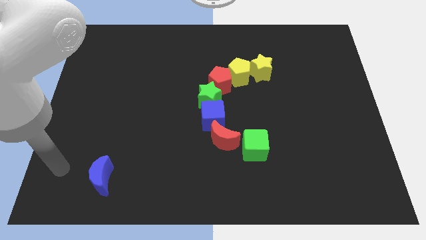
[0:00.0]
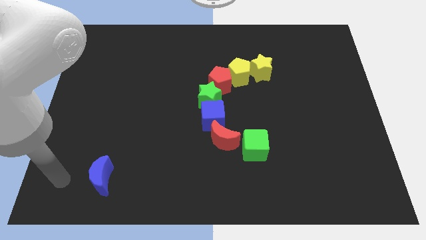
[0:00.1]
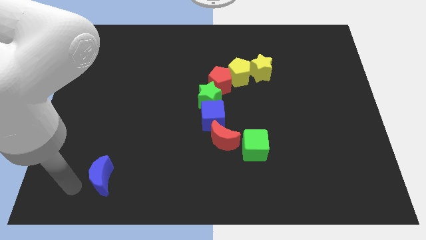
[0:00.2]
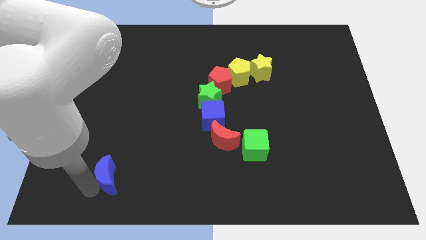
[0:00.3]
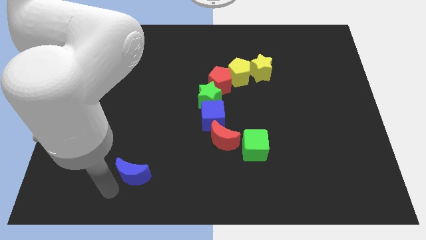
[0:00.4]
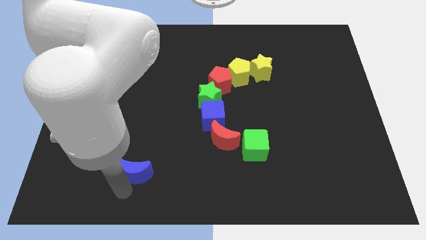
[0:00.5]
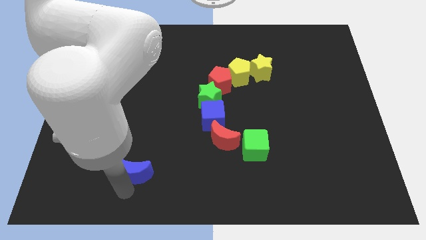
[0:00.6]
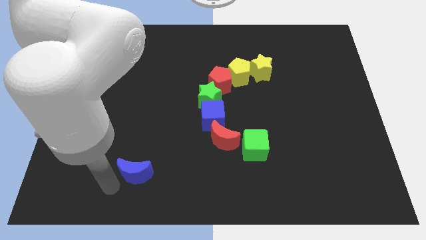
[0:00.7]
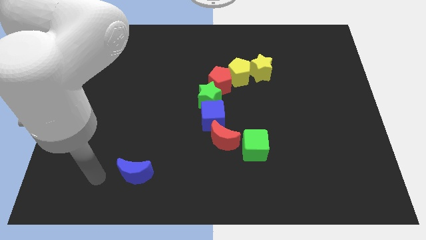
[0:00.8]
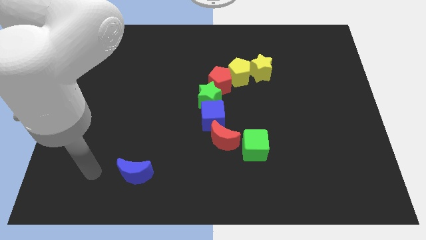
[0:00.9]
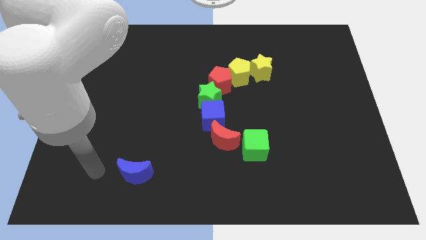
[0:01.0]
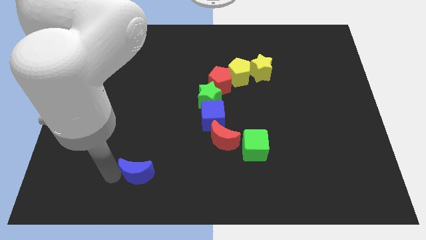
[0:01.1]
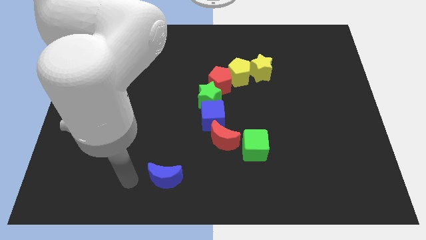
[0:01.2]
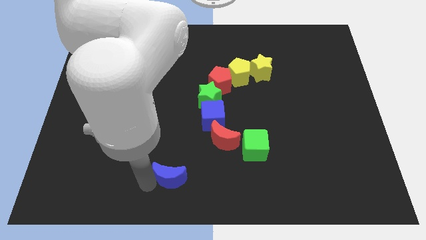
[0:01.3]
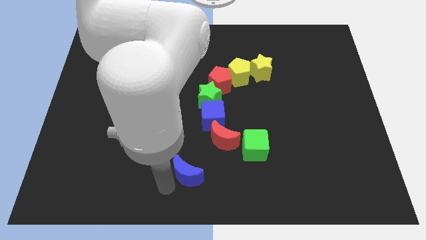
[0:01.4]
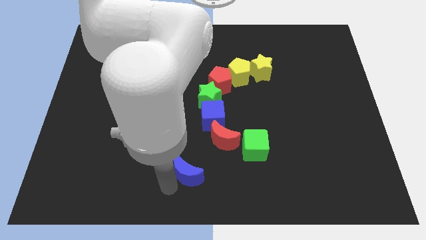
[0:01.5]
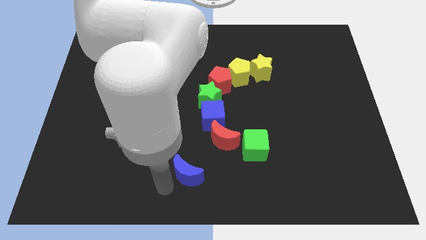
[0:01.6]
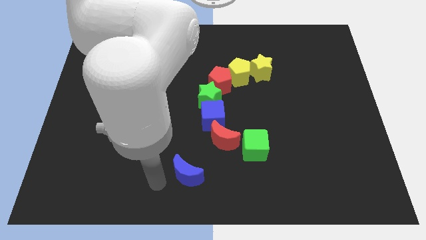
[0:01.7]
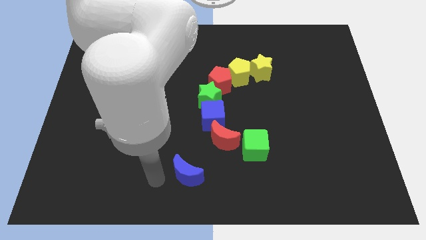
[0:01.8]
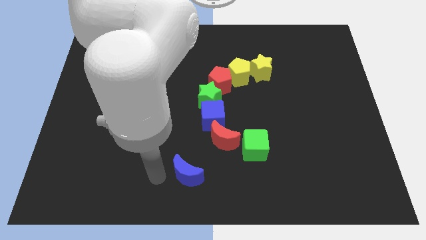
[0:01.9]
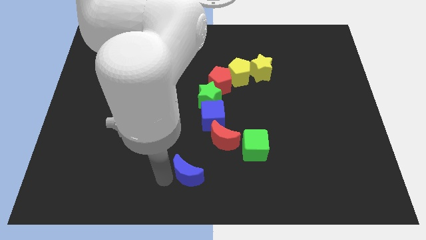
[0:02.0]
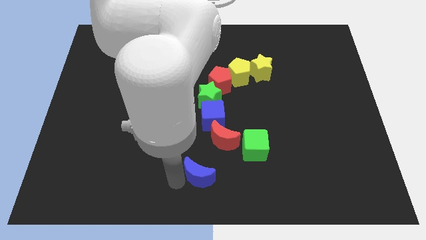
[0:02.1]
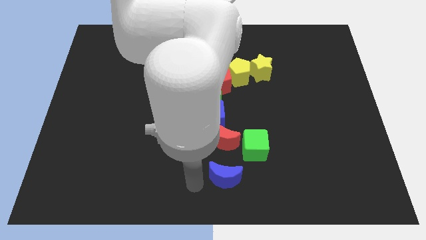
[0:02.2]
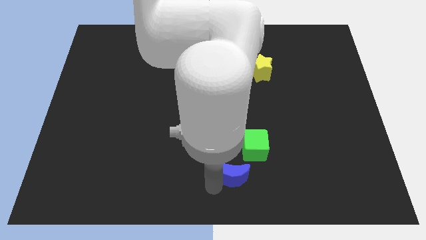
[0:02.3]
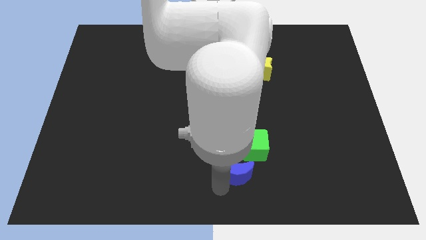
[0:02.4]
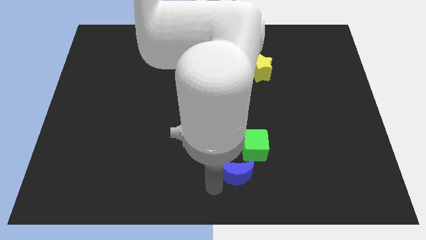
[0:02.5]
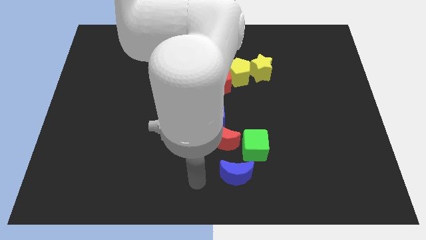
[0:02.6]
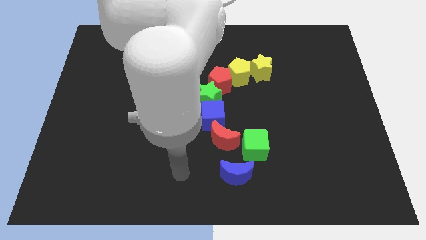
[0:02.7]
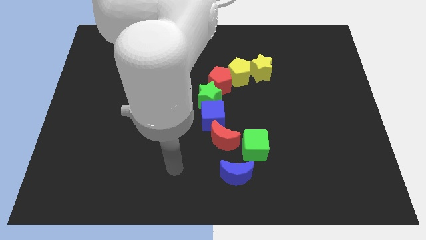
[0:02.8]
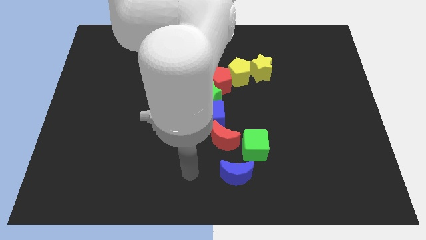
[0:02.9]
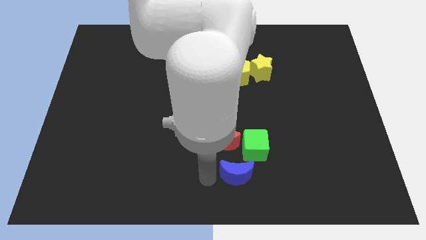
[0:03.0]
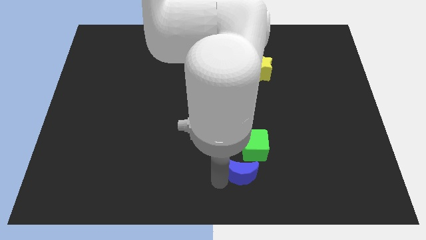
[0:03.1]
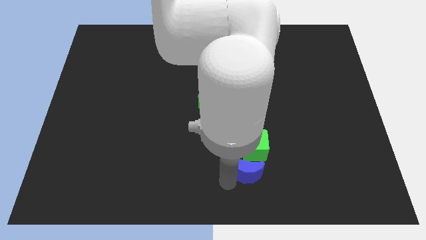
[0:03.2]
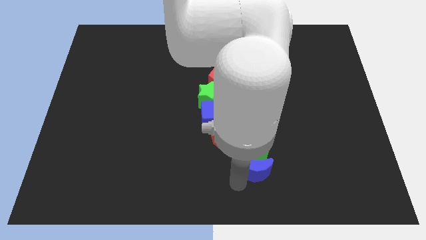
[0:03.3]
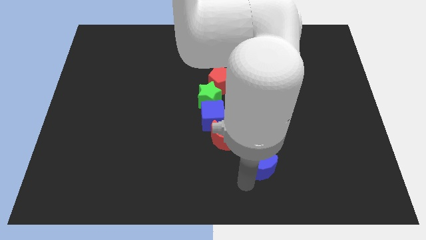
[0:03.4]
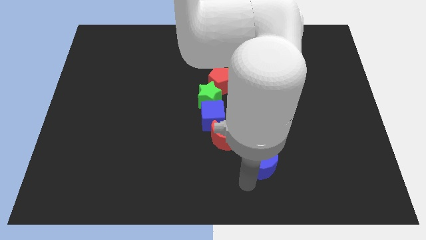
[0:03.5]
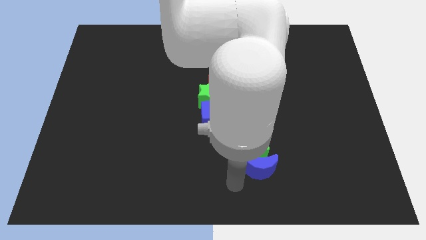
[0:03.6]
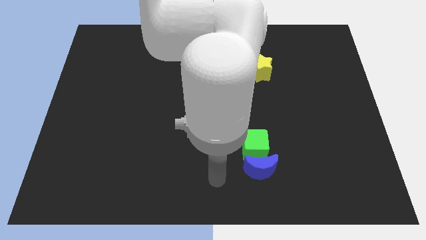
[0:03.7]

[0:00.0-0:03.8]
slide the blue moon below the green cube

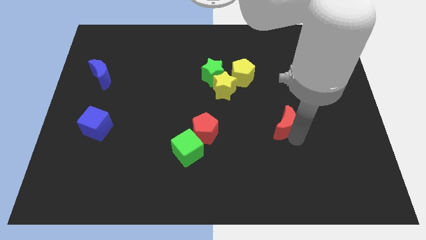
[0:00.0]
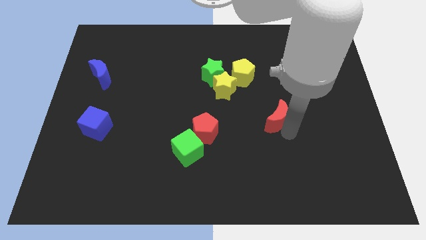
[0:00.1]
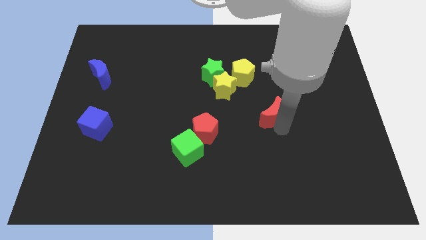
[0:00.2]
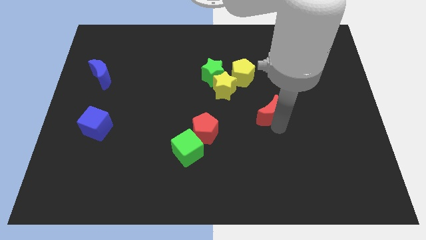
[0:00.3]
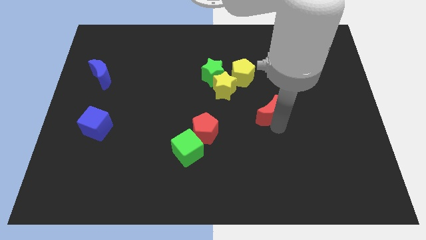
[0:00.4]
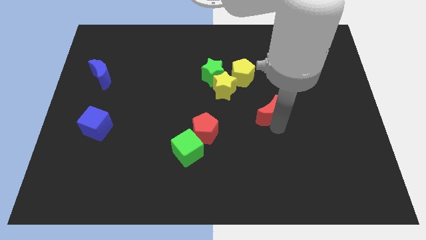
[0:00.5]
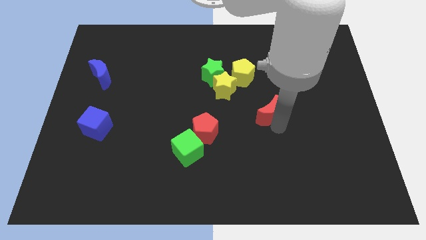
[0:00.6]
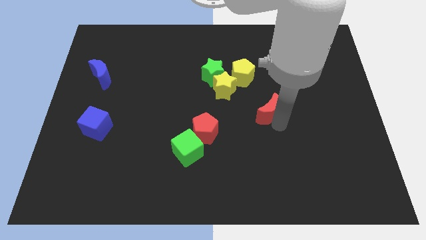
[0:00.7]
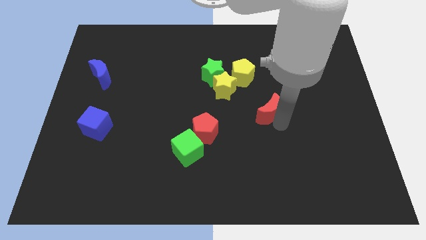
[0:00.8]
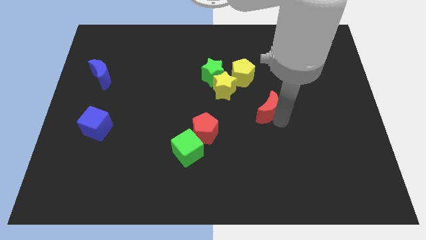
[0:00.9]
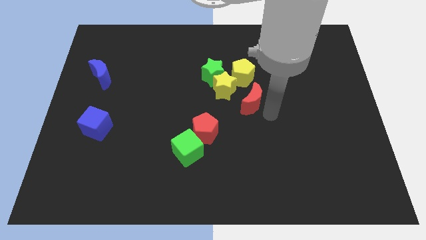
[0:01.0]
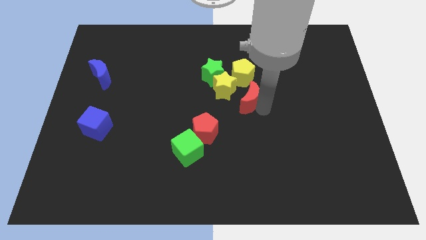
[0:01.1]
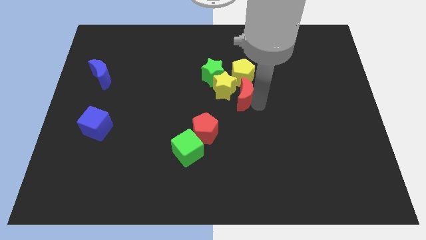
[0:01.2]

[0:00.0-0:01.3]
push the red moon towards the yellow blocks

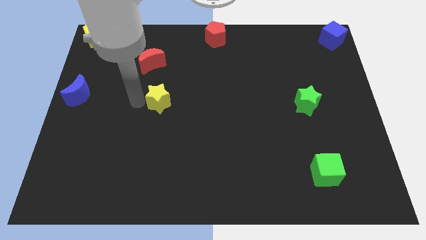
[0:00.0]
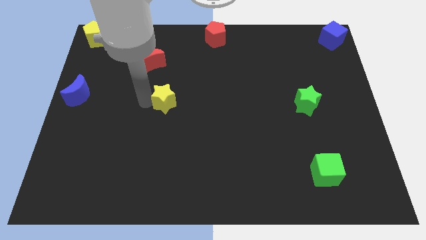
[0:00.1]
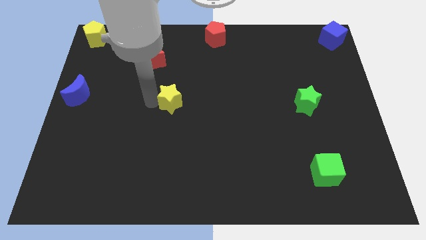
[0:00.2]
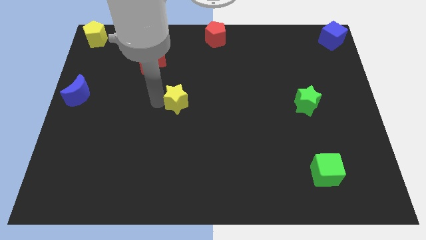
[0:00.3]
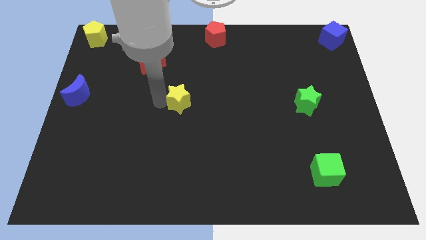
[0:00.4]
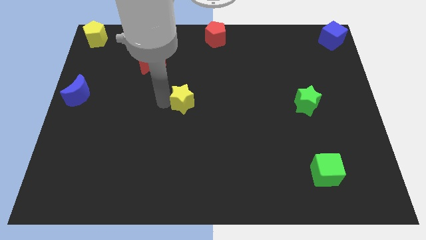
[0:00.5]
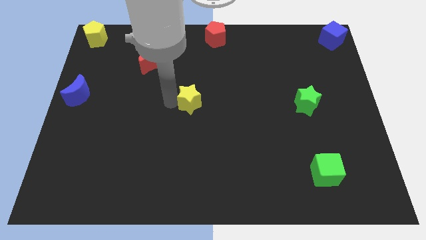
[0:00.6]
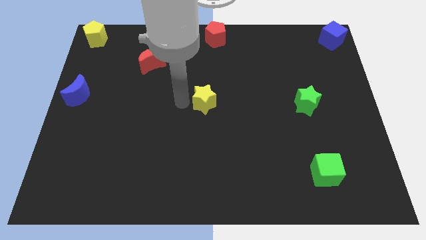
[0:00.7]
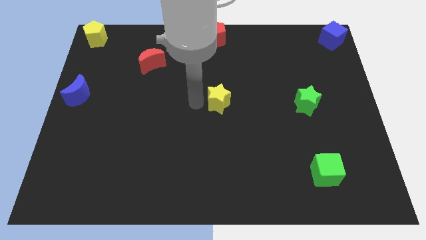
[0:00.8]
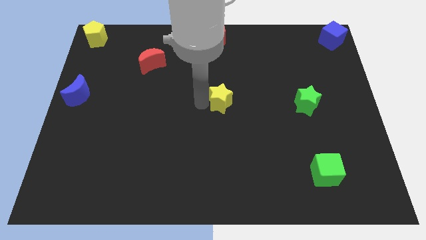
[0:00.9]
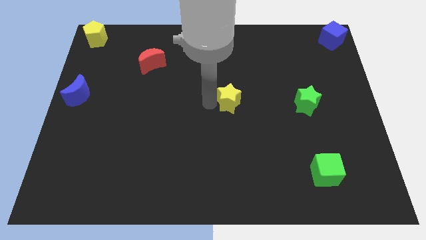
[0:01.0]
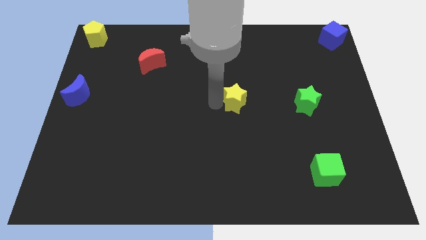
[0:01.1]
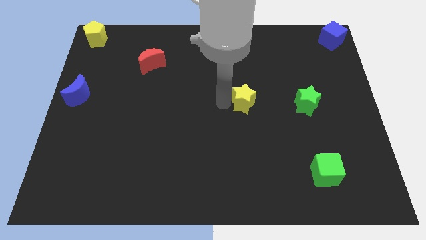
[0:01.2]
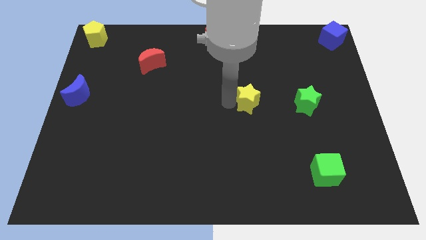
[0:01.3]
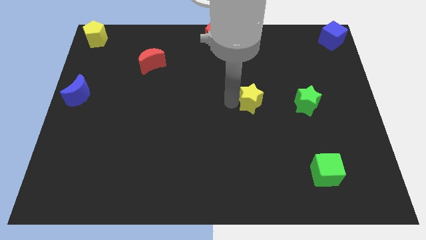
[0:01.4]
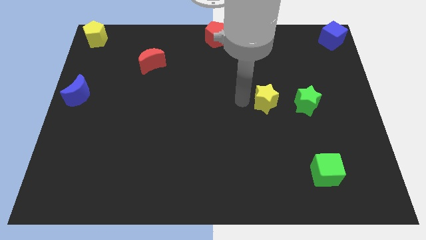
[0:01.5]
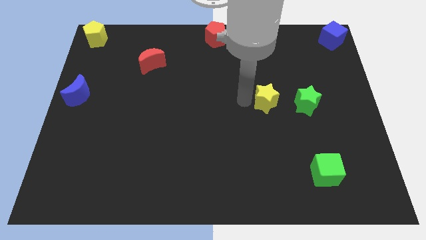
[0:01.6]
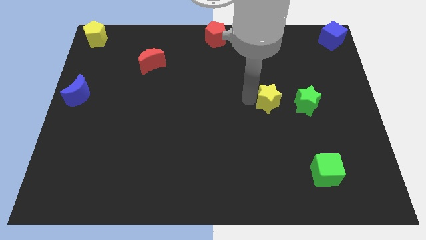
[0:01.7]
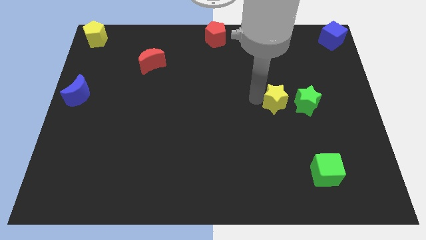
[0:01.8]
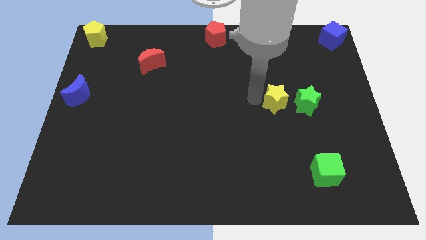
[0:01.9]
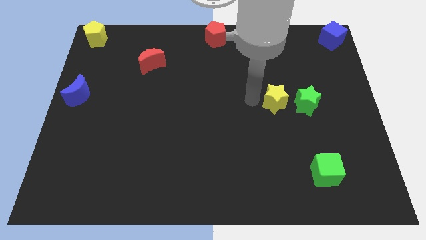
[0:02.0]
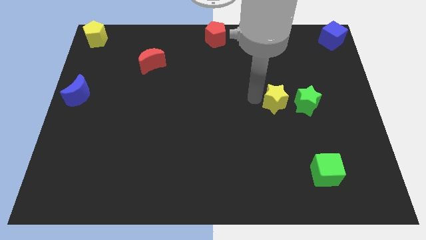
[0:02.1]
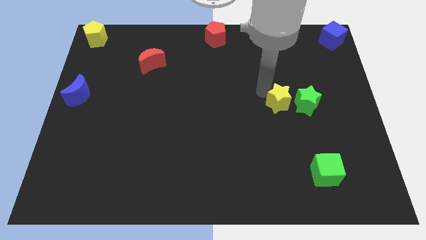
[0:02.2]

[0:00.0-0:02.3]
push the yellow star to the left of the green star

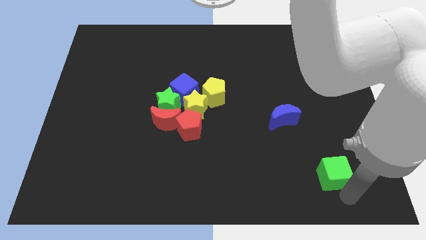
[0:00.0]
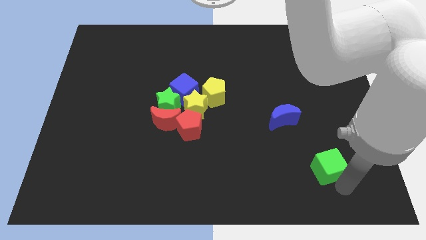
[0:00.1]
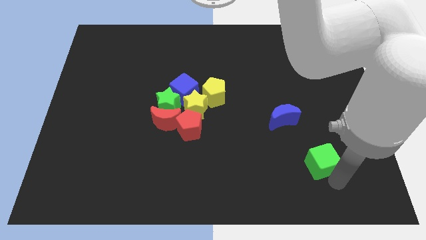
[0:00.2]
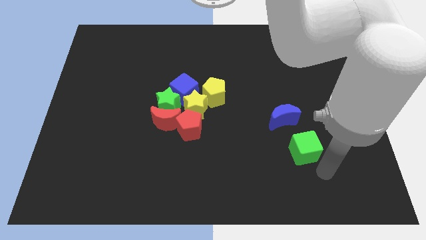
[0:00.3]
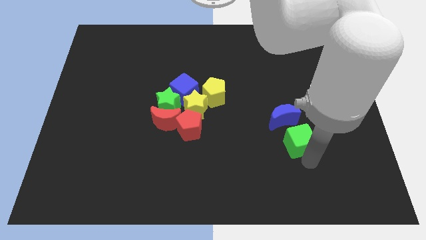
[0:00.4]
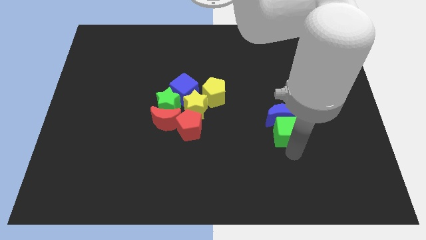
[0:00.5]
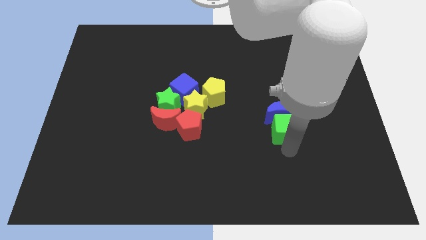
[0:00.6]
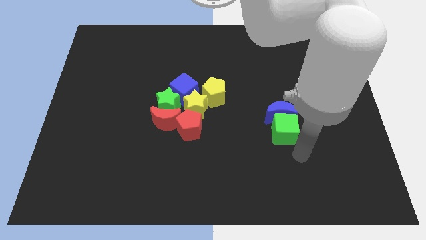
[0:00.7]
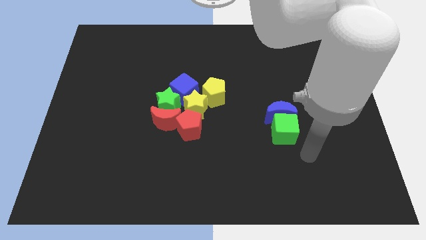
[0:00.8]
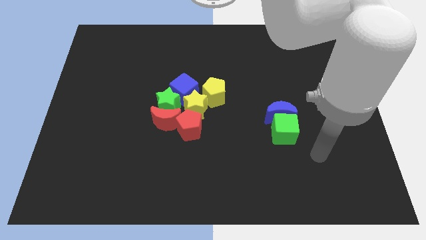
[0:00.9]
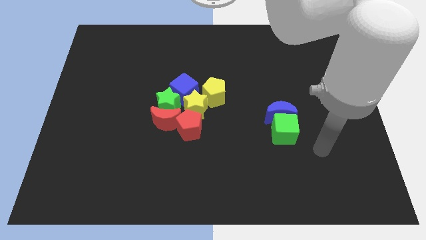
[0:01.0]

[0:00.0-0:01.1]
place green cube below blue moon

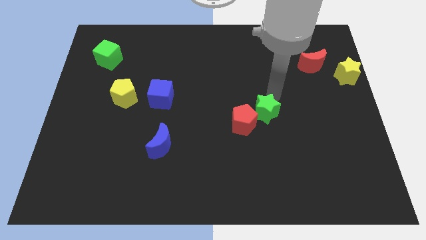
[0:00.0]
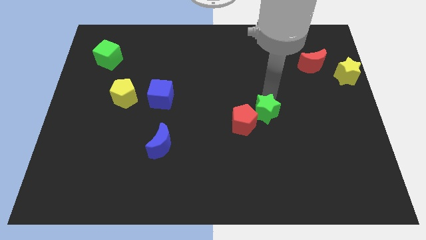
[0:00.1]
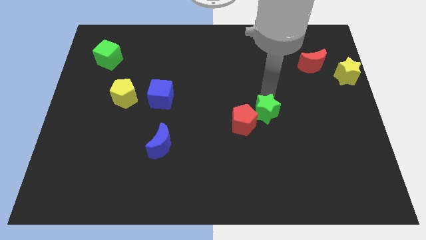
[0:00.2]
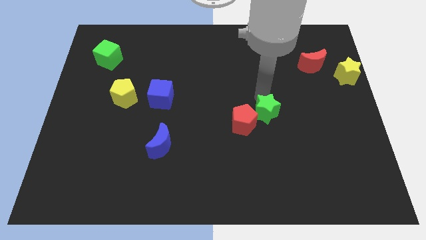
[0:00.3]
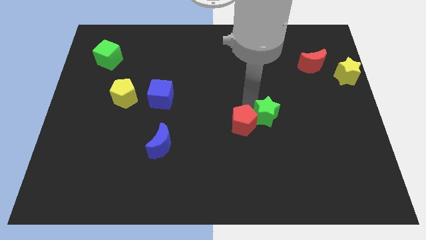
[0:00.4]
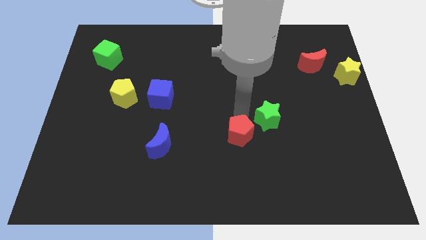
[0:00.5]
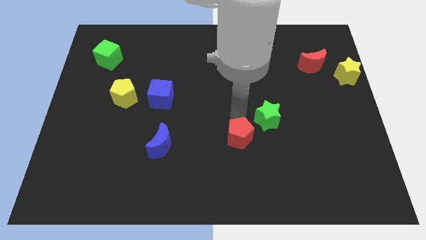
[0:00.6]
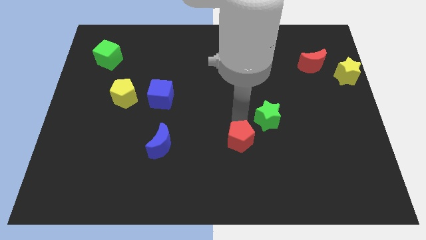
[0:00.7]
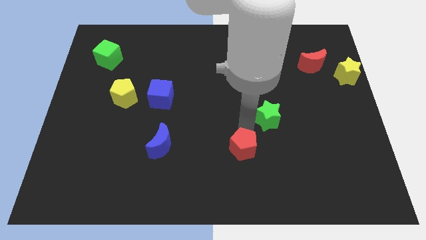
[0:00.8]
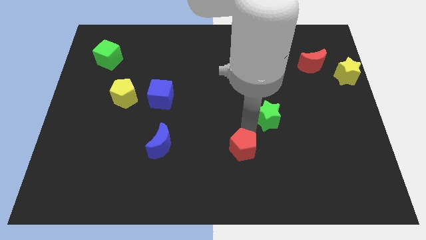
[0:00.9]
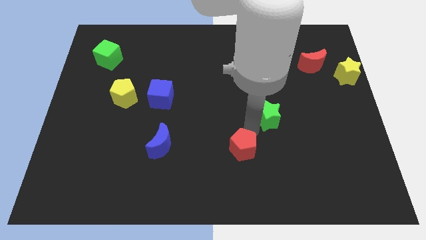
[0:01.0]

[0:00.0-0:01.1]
separate green star and red pentagon
